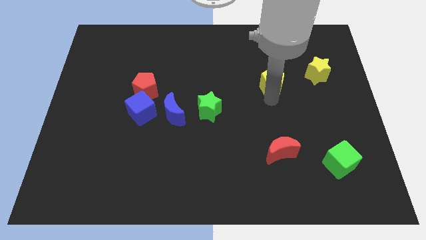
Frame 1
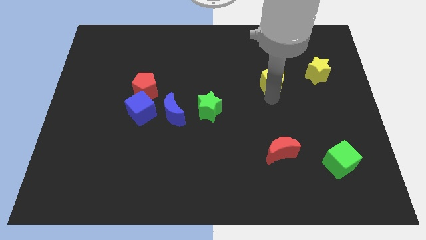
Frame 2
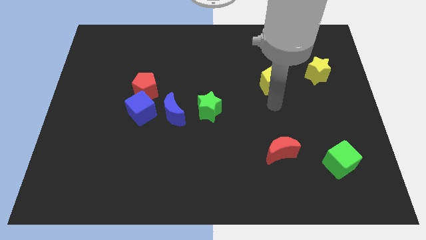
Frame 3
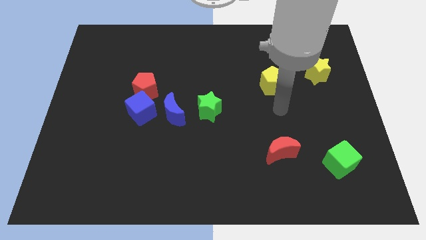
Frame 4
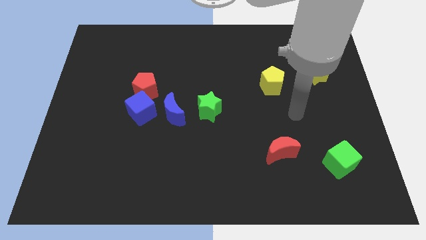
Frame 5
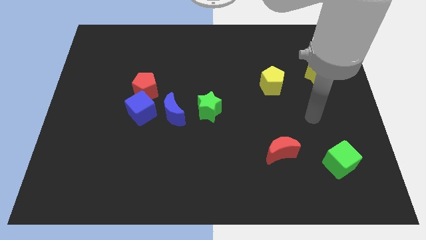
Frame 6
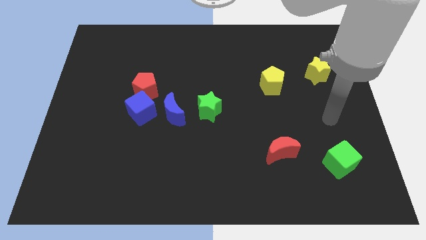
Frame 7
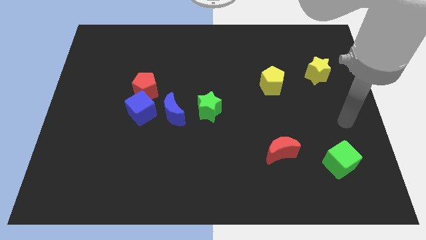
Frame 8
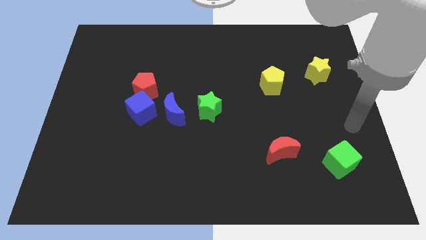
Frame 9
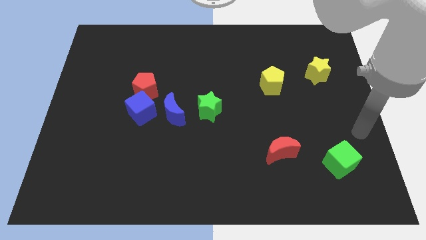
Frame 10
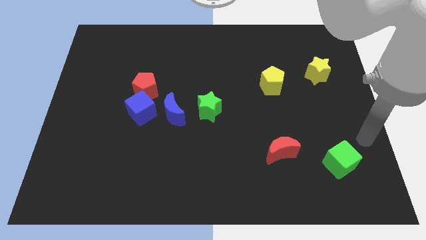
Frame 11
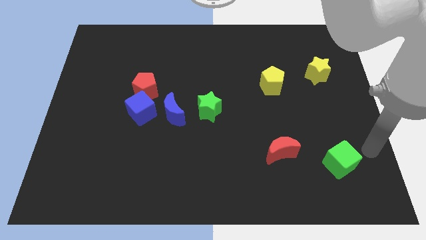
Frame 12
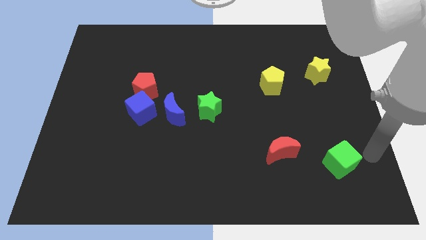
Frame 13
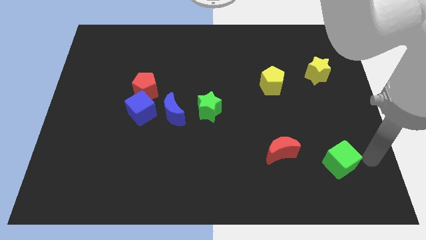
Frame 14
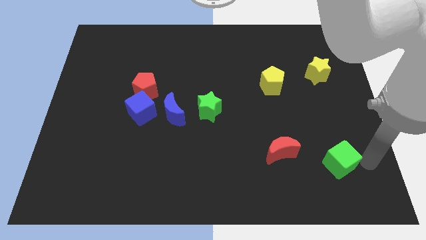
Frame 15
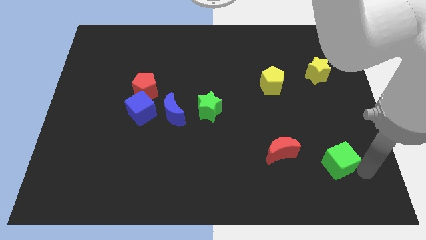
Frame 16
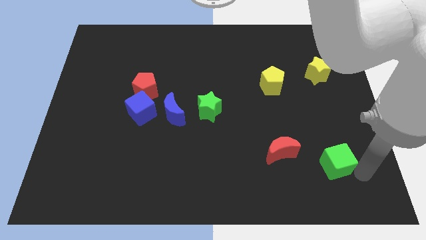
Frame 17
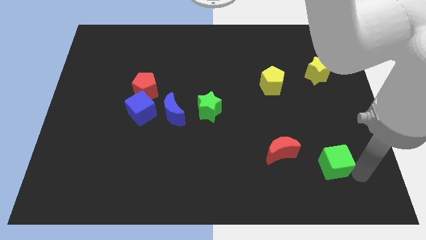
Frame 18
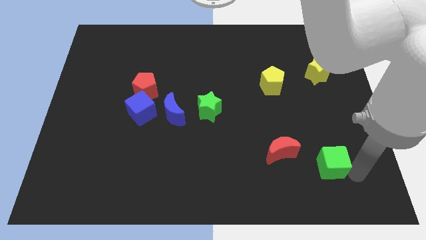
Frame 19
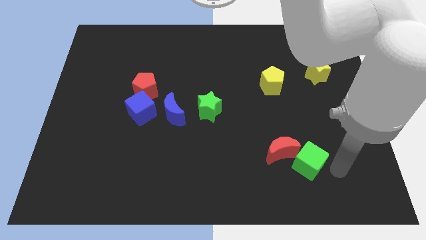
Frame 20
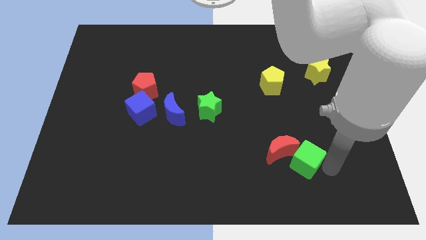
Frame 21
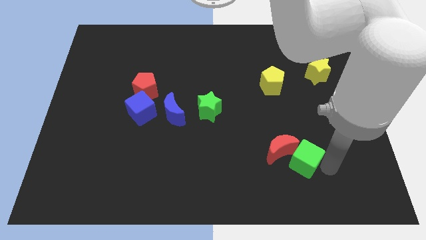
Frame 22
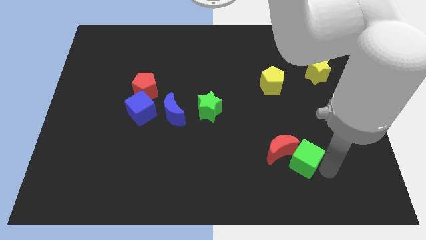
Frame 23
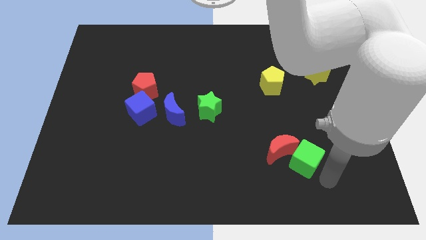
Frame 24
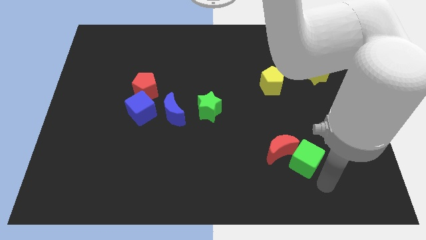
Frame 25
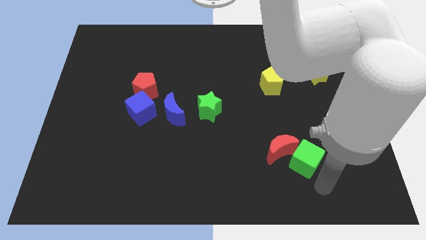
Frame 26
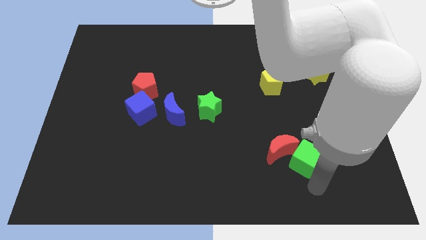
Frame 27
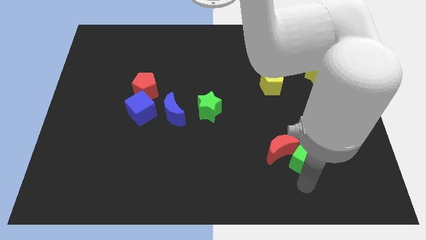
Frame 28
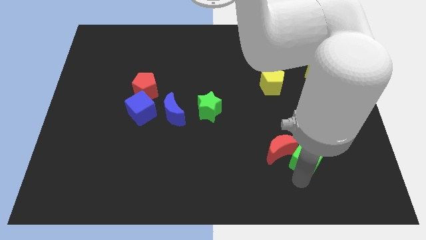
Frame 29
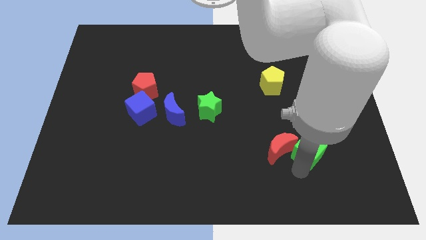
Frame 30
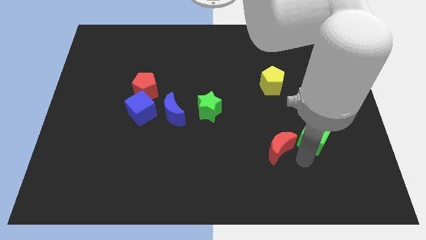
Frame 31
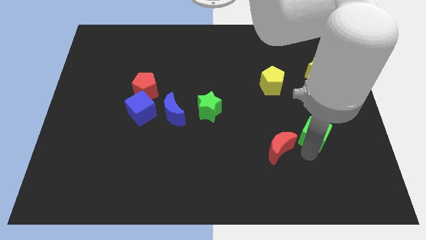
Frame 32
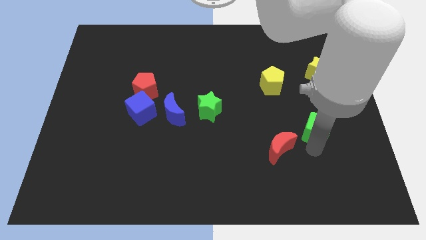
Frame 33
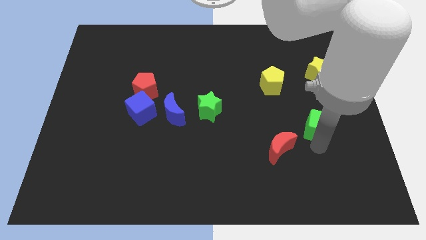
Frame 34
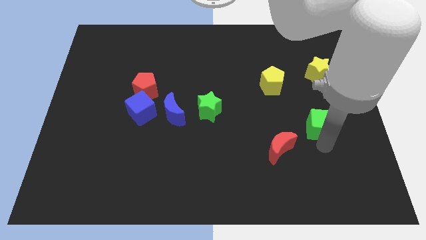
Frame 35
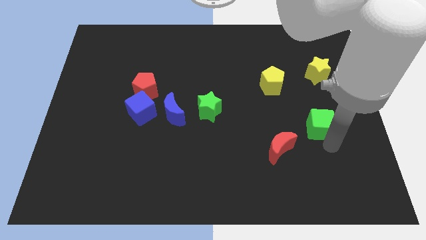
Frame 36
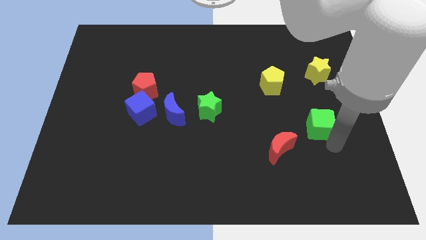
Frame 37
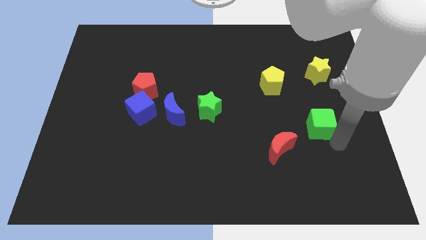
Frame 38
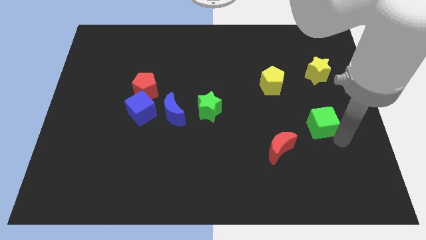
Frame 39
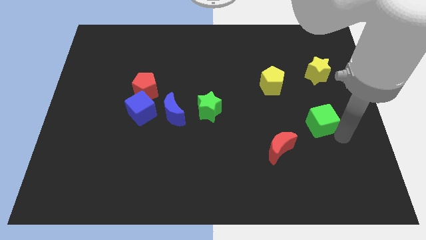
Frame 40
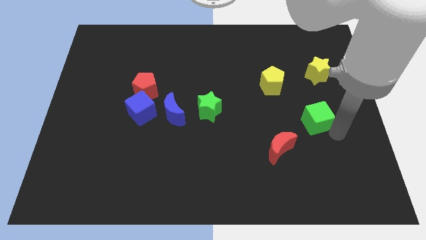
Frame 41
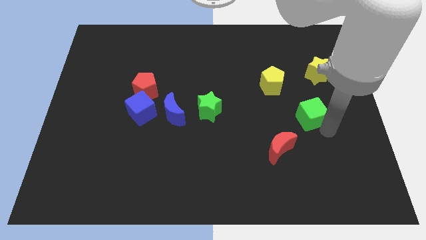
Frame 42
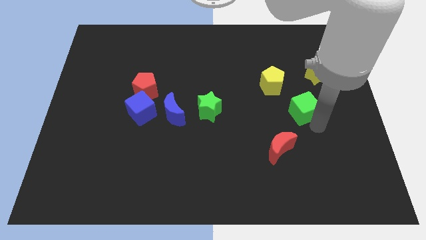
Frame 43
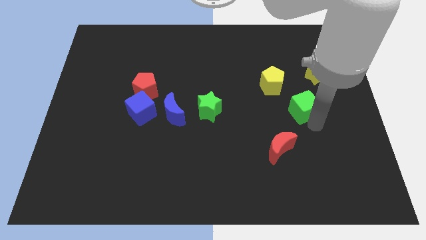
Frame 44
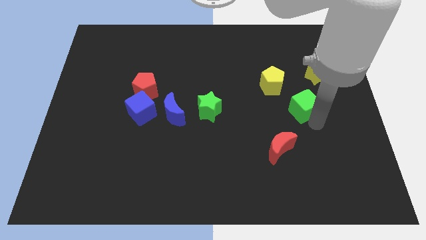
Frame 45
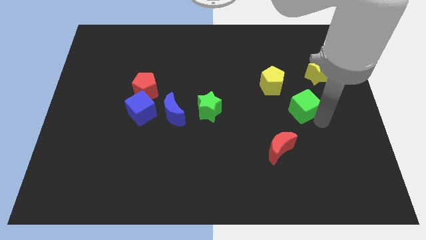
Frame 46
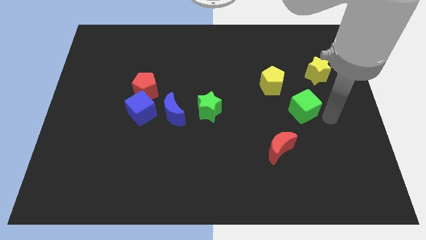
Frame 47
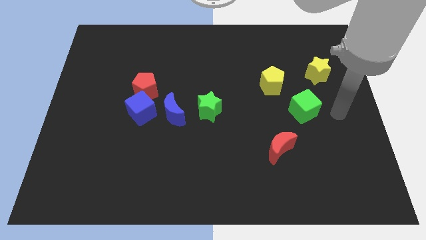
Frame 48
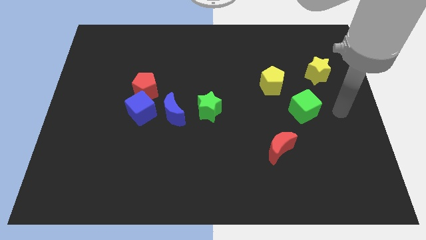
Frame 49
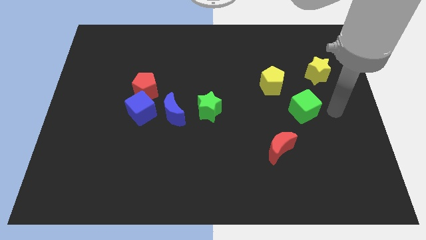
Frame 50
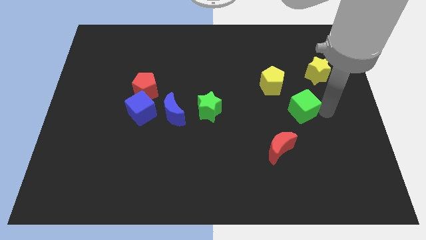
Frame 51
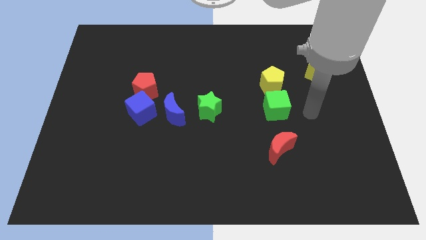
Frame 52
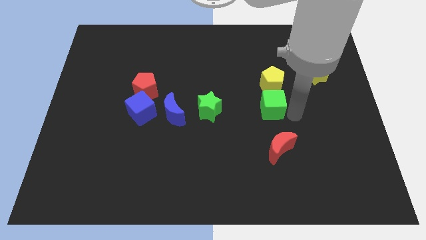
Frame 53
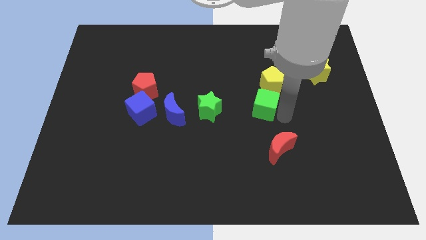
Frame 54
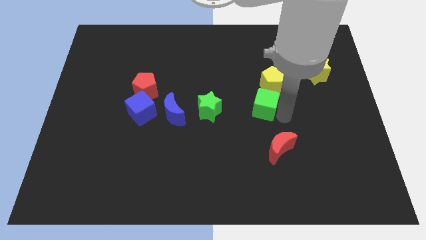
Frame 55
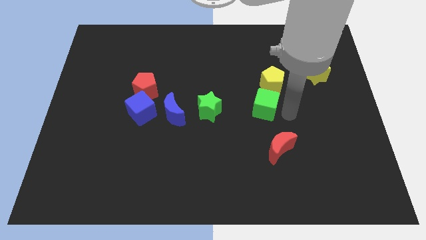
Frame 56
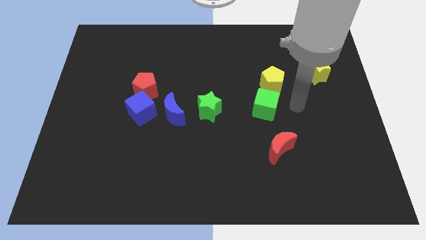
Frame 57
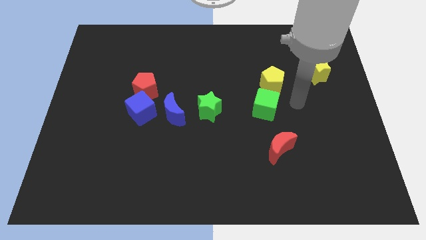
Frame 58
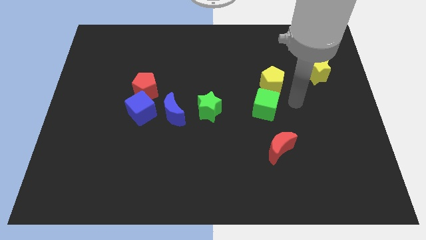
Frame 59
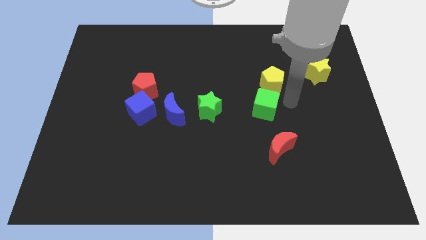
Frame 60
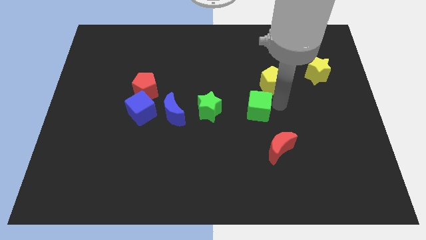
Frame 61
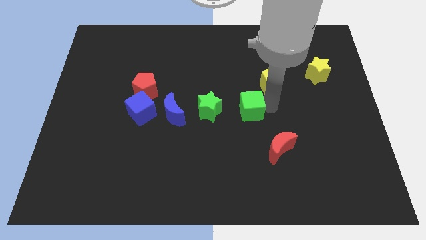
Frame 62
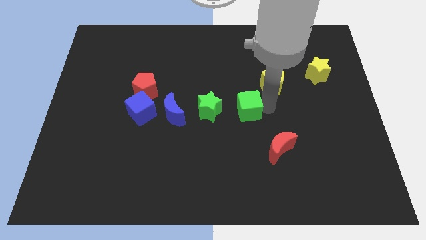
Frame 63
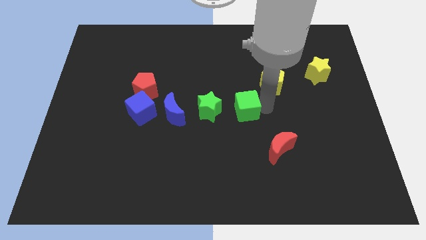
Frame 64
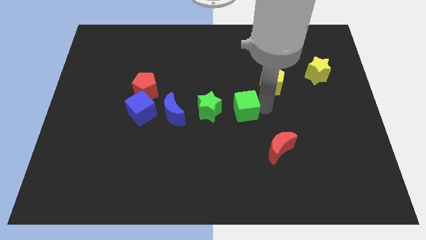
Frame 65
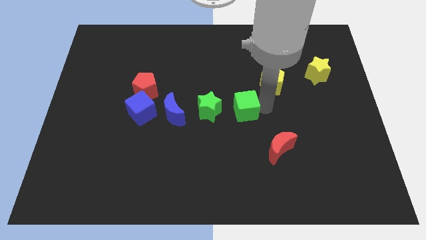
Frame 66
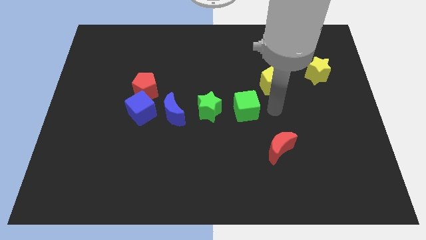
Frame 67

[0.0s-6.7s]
move the green cube right beside the green star

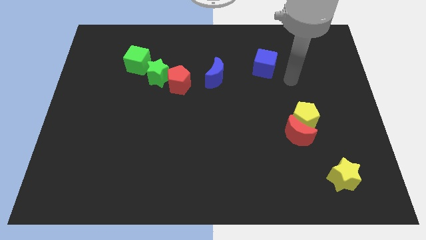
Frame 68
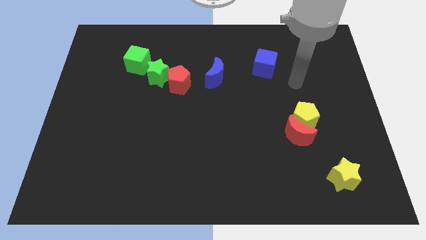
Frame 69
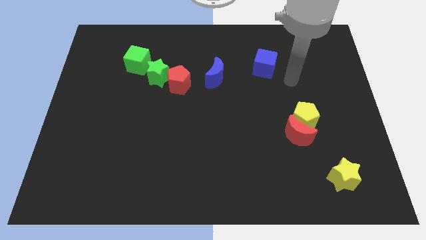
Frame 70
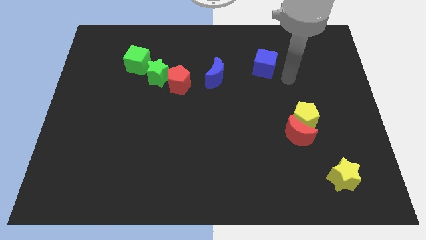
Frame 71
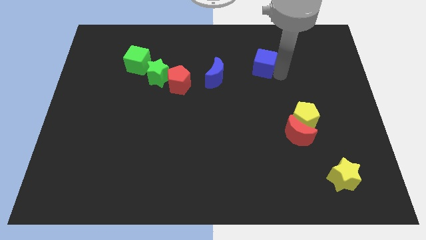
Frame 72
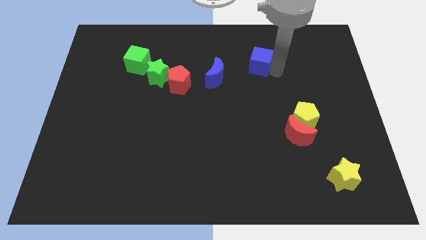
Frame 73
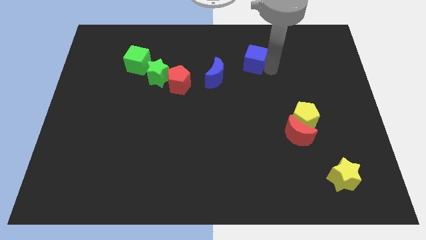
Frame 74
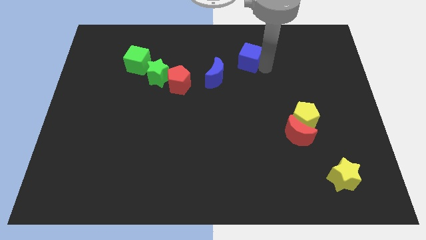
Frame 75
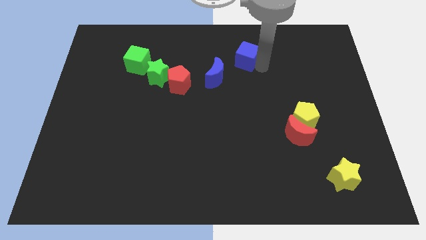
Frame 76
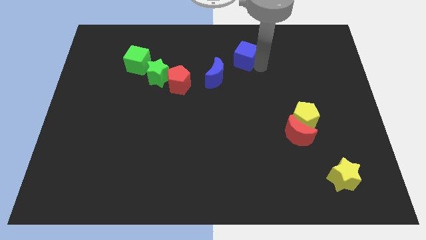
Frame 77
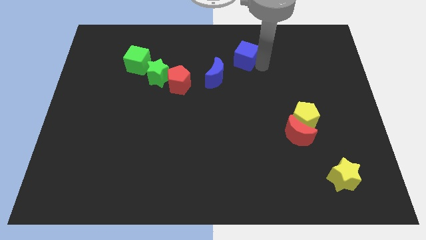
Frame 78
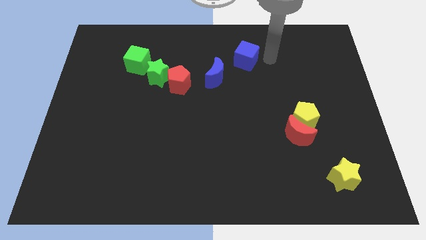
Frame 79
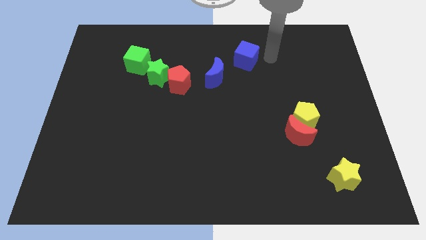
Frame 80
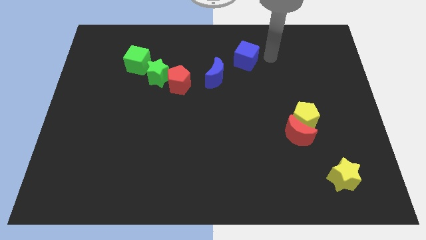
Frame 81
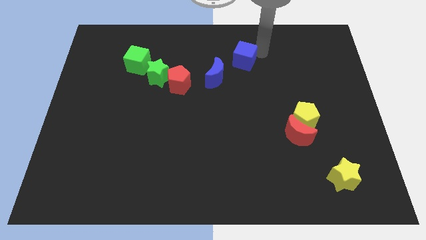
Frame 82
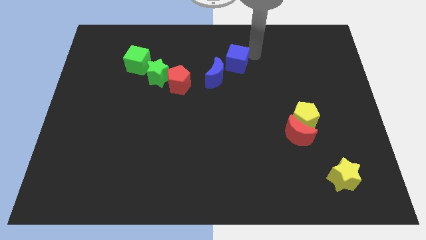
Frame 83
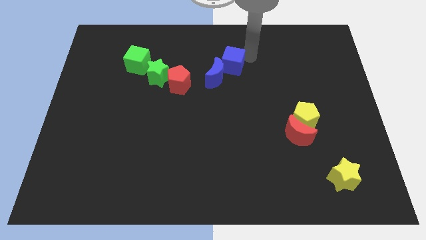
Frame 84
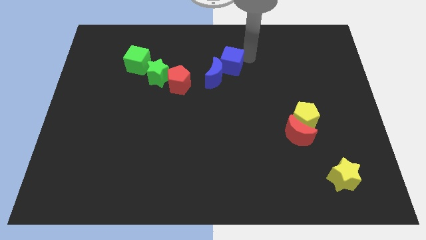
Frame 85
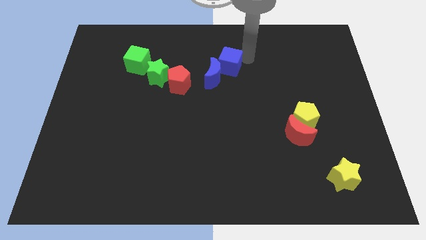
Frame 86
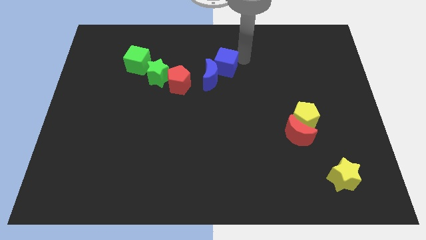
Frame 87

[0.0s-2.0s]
move blue cube into the blue crescent
